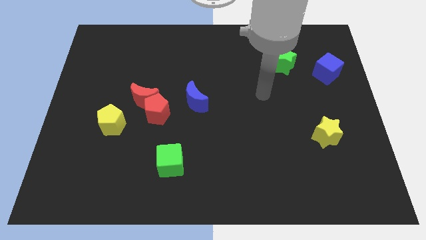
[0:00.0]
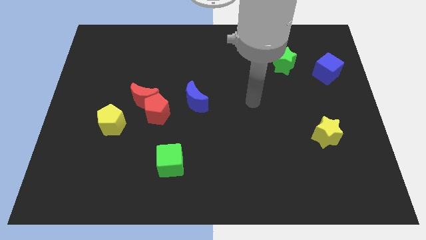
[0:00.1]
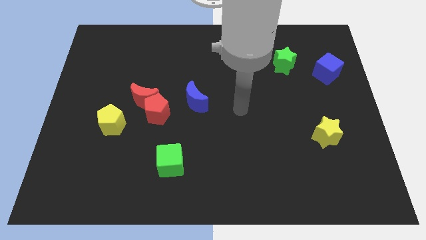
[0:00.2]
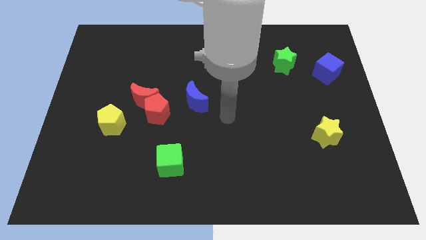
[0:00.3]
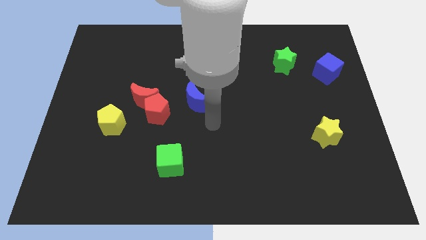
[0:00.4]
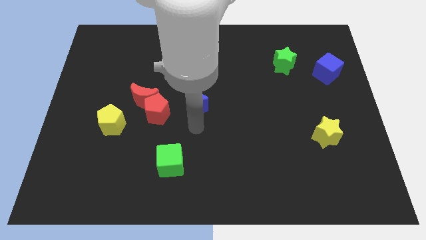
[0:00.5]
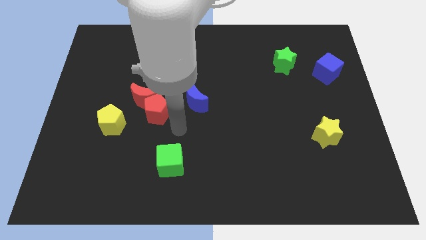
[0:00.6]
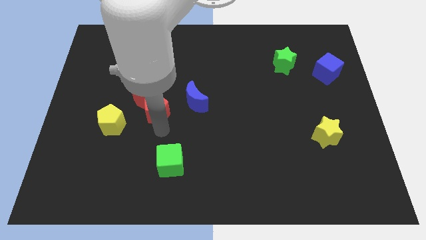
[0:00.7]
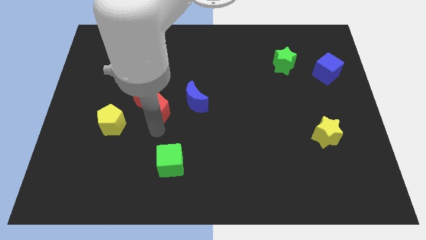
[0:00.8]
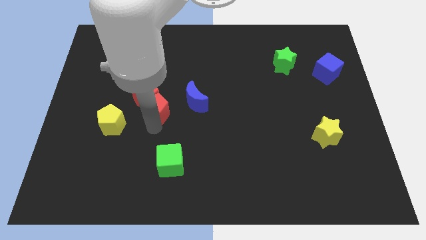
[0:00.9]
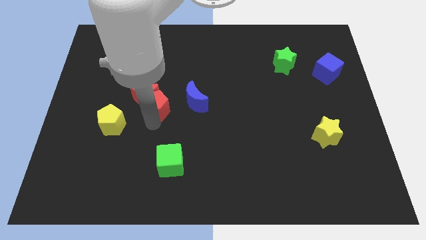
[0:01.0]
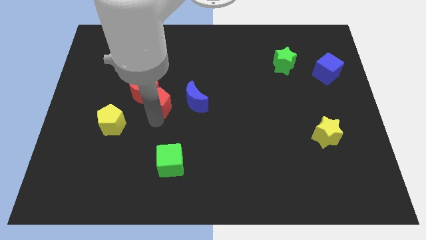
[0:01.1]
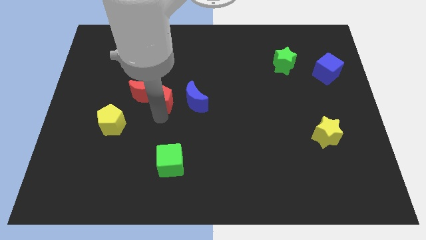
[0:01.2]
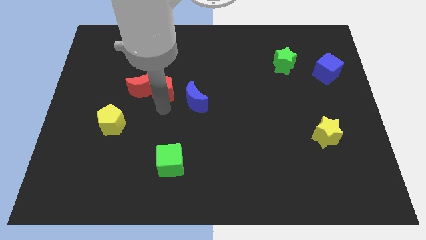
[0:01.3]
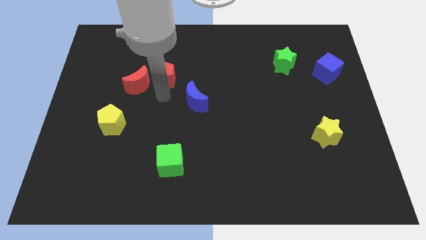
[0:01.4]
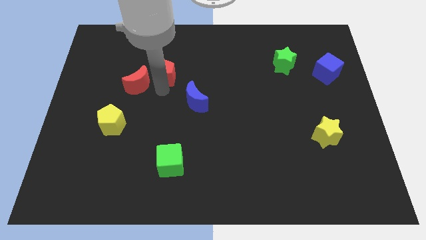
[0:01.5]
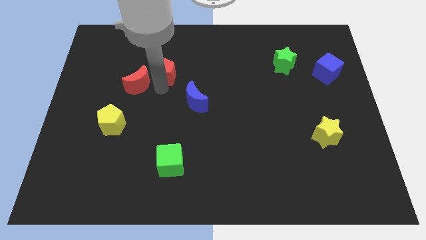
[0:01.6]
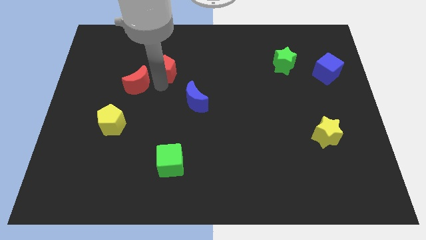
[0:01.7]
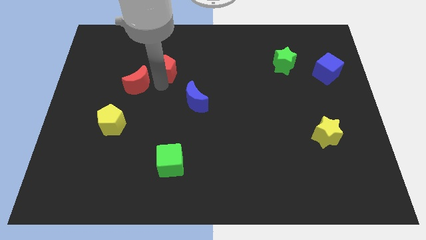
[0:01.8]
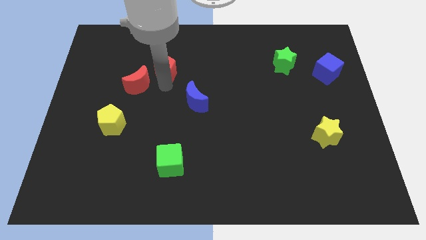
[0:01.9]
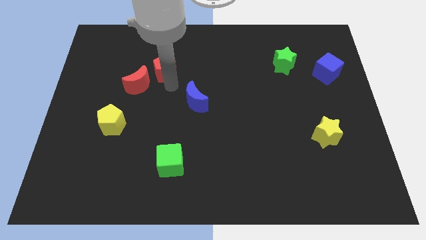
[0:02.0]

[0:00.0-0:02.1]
slide the red pentagon towards the top side

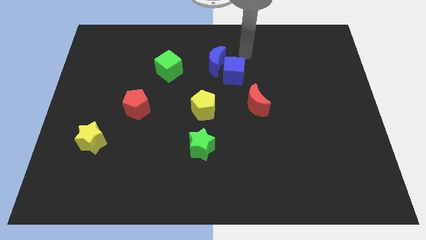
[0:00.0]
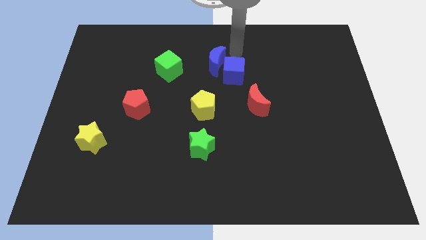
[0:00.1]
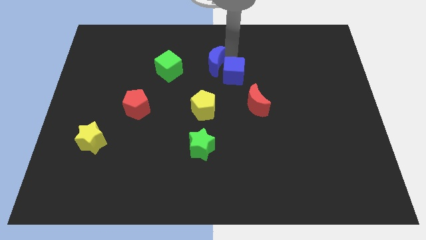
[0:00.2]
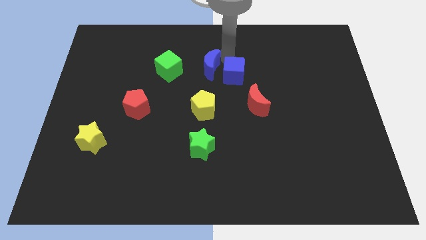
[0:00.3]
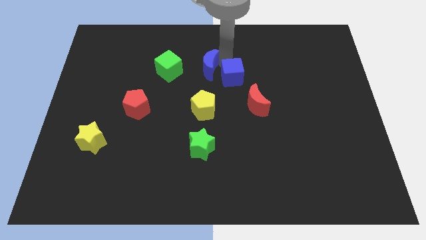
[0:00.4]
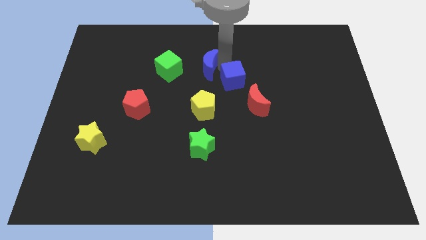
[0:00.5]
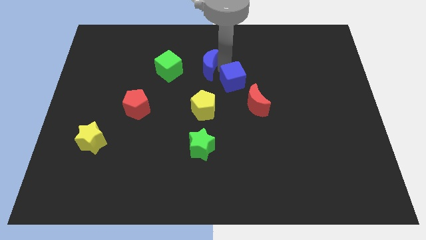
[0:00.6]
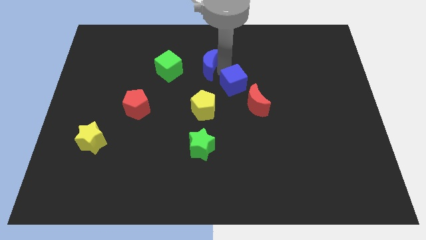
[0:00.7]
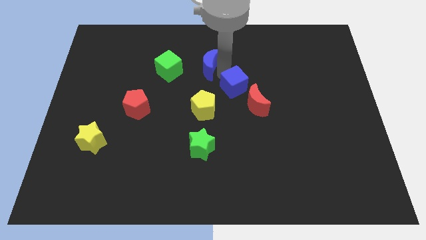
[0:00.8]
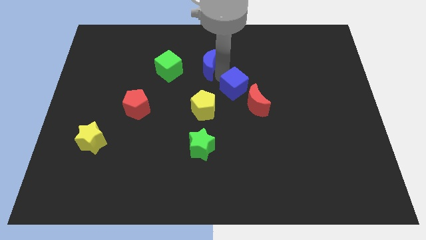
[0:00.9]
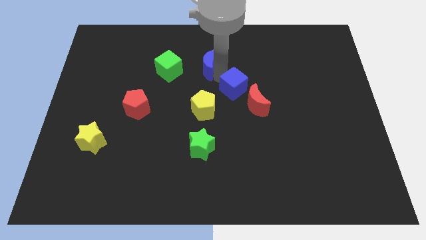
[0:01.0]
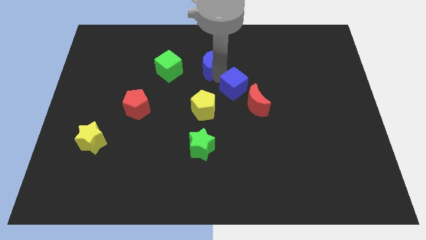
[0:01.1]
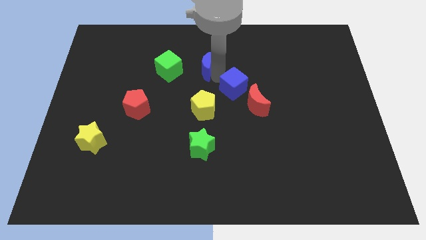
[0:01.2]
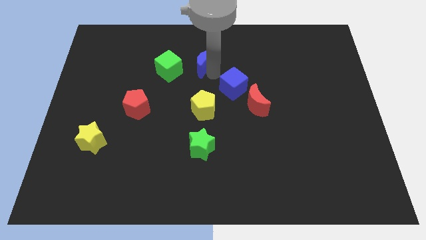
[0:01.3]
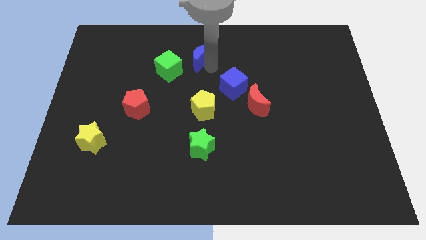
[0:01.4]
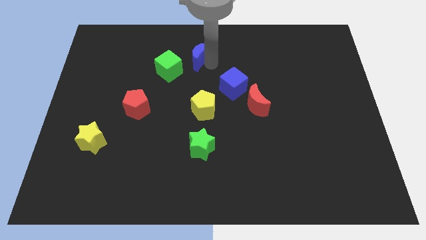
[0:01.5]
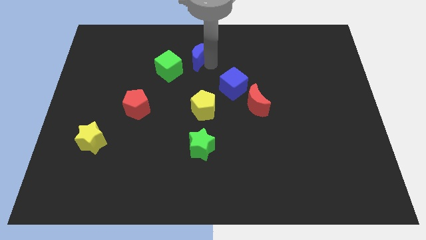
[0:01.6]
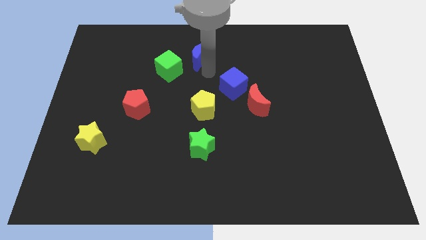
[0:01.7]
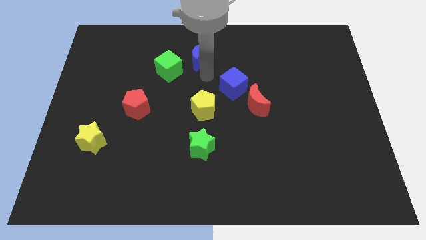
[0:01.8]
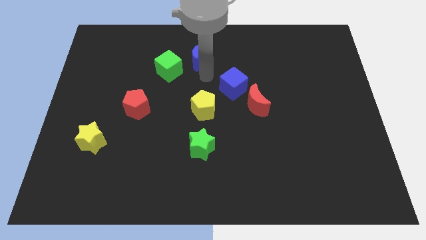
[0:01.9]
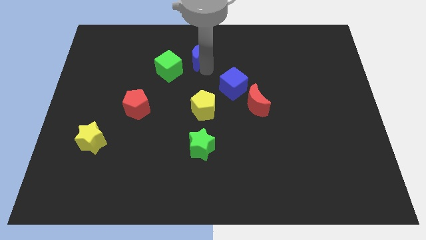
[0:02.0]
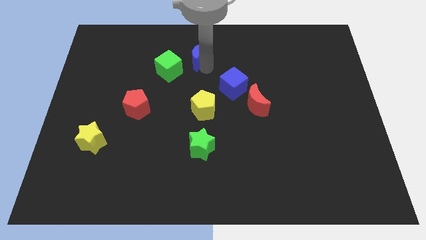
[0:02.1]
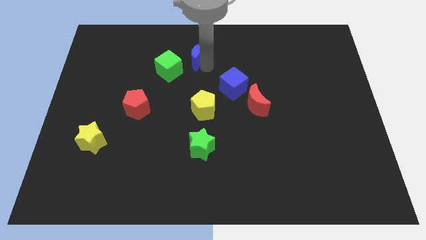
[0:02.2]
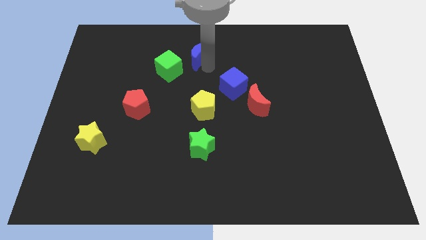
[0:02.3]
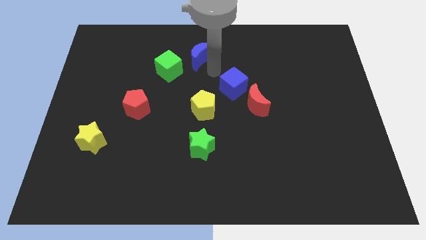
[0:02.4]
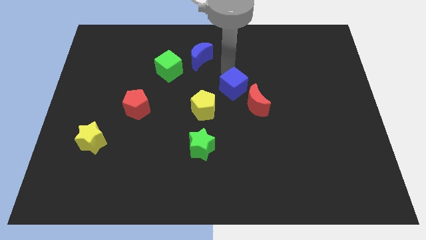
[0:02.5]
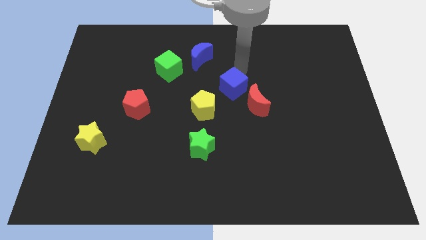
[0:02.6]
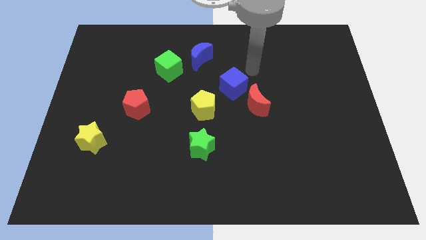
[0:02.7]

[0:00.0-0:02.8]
push the blue moon upwards slightly

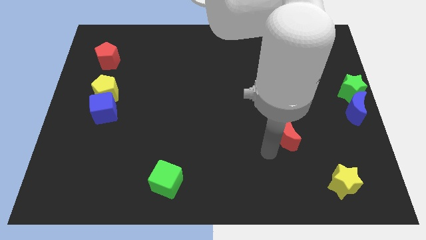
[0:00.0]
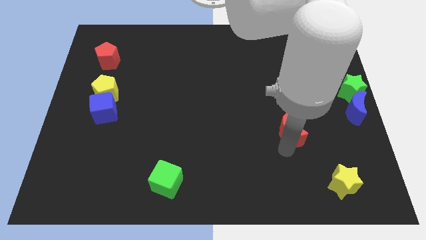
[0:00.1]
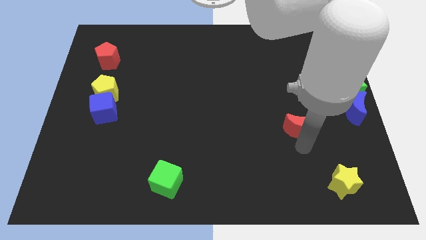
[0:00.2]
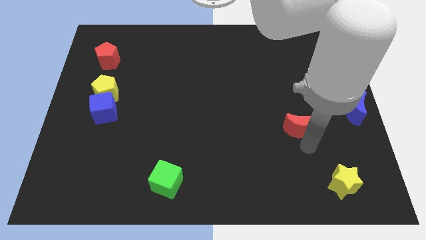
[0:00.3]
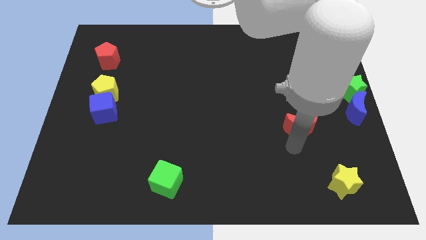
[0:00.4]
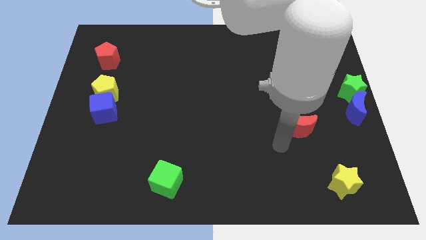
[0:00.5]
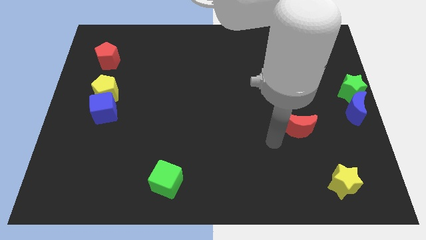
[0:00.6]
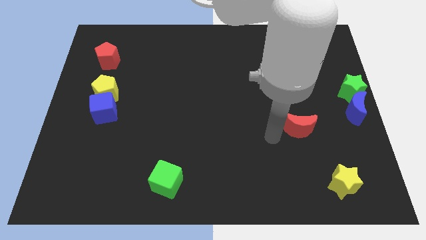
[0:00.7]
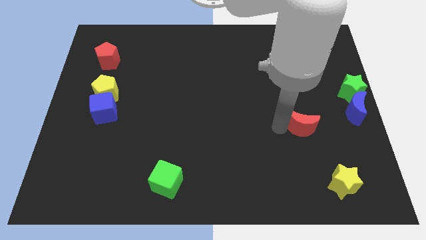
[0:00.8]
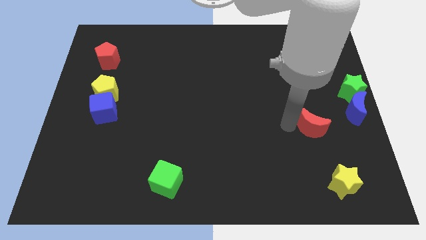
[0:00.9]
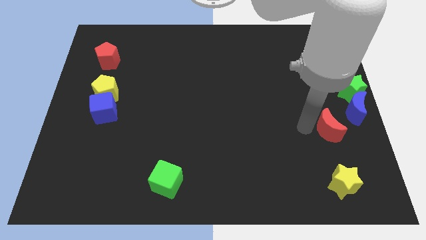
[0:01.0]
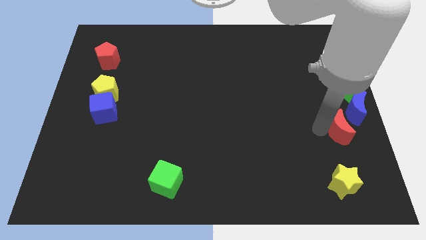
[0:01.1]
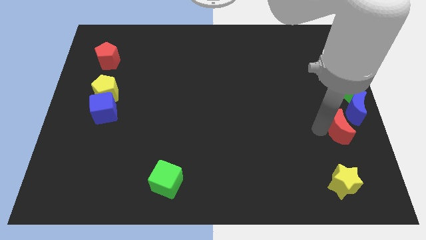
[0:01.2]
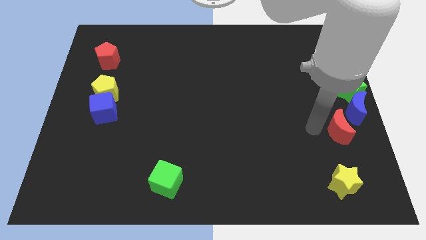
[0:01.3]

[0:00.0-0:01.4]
move the red moon above the yellow star

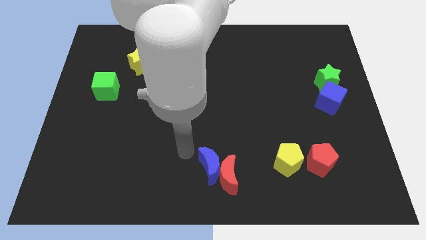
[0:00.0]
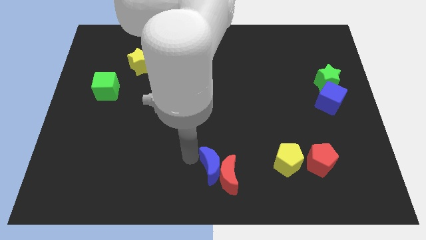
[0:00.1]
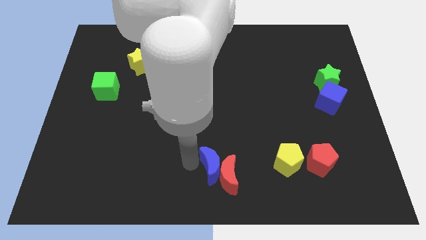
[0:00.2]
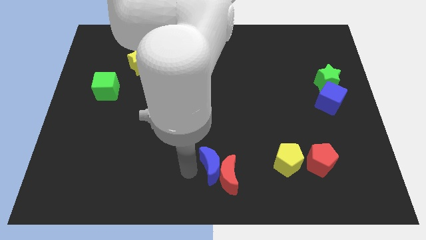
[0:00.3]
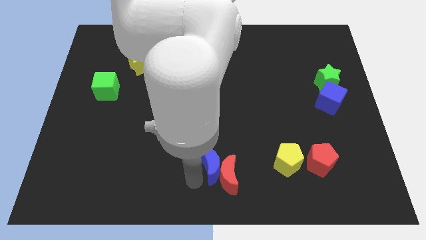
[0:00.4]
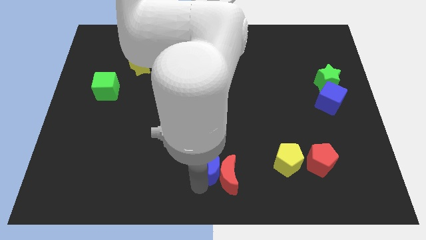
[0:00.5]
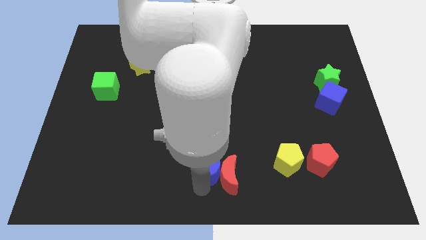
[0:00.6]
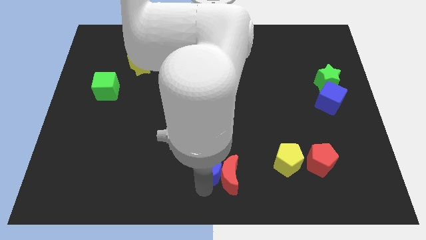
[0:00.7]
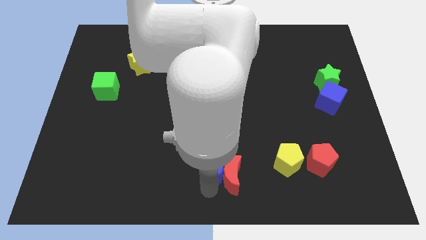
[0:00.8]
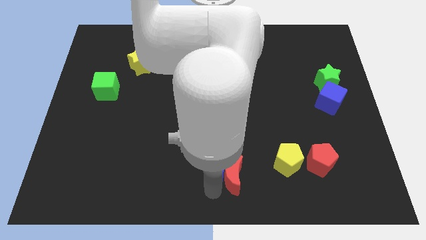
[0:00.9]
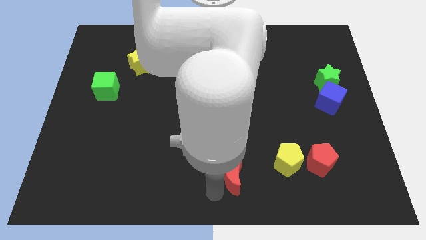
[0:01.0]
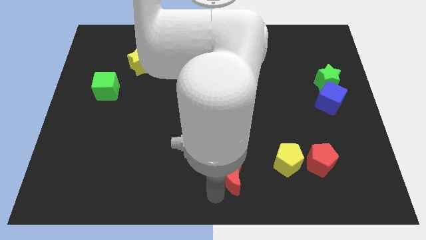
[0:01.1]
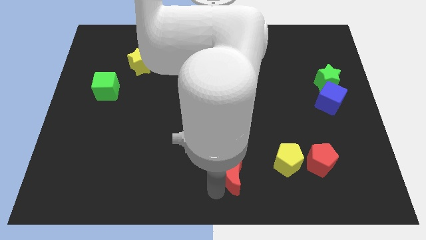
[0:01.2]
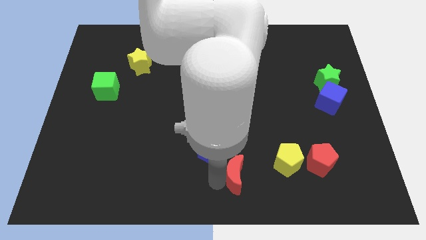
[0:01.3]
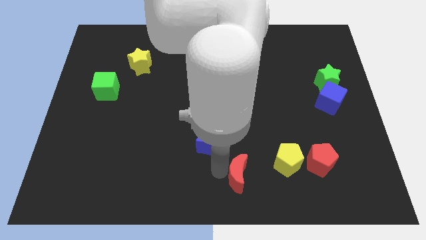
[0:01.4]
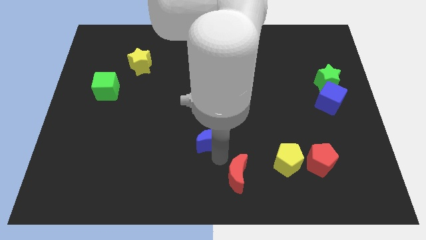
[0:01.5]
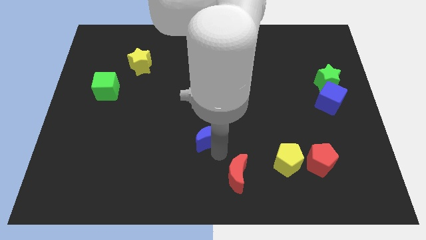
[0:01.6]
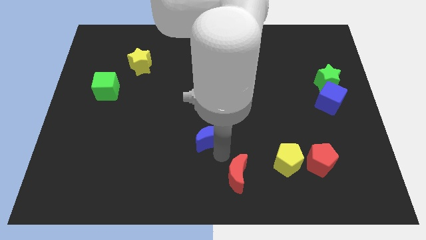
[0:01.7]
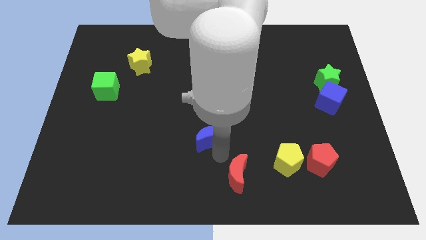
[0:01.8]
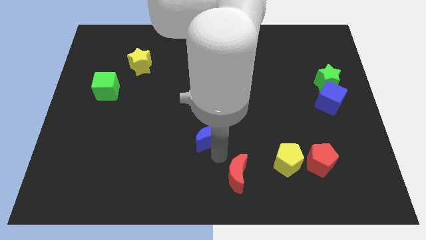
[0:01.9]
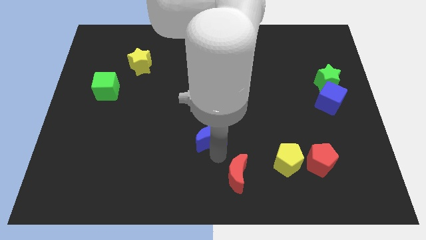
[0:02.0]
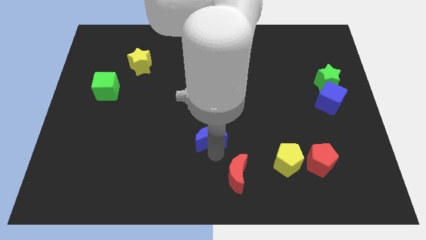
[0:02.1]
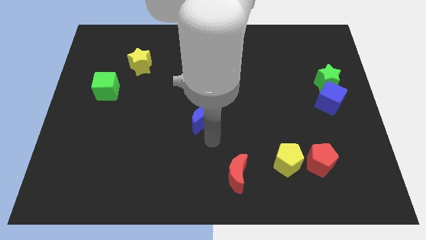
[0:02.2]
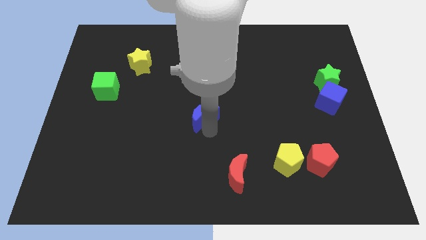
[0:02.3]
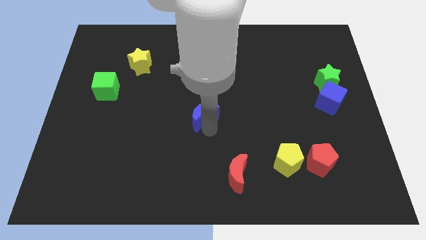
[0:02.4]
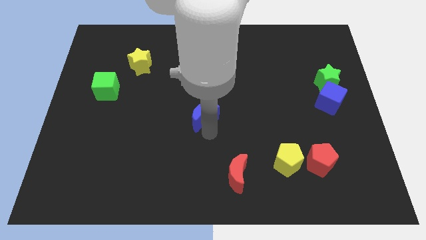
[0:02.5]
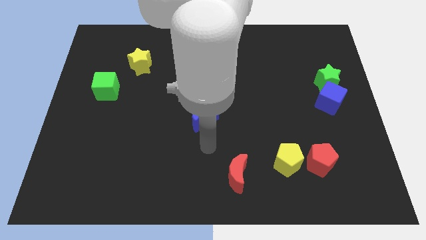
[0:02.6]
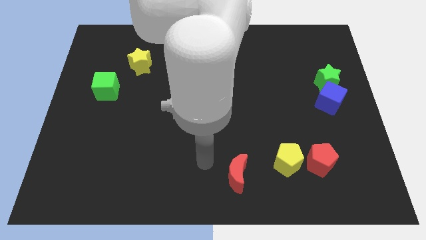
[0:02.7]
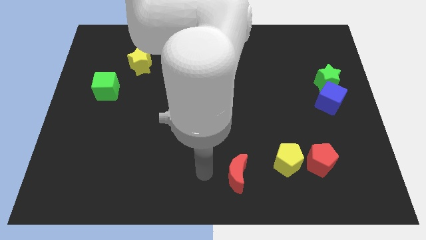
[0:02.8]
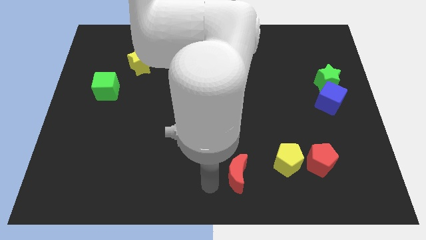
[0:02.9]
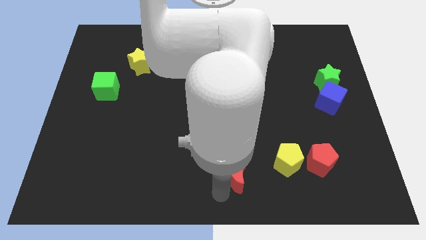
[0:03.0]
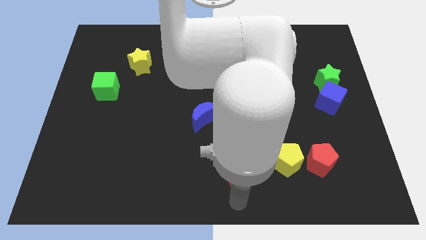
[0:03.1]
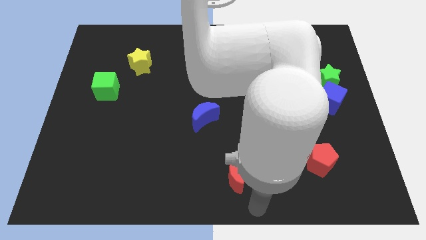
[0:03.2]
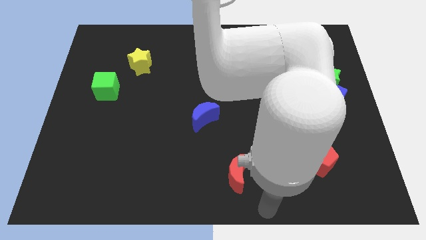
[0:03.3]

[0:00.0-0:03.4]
move blue moon to the middle
